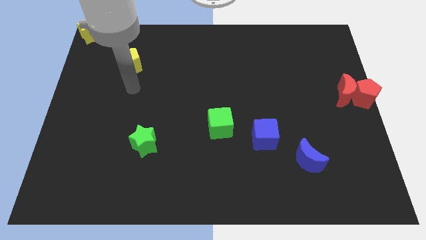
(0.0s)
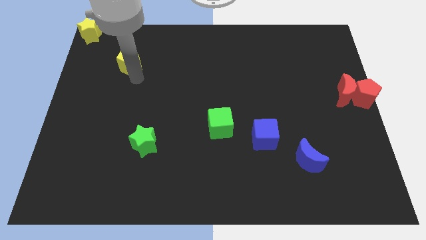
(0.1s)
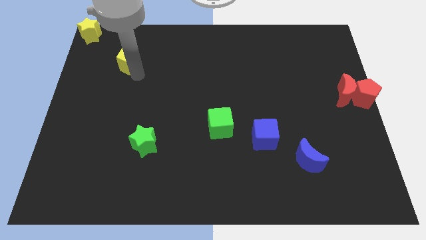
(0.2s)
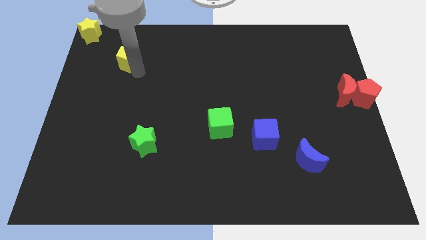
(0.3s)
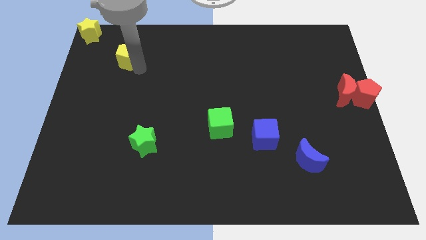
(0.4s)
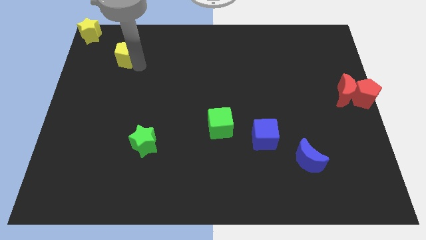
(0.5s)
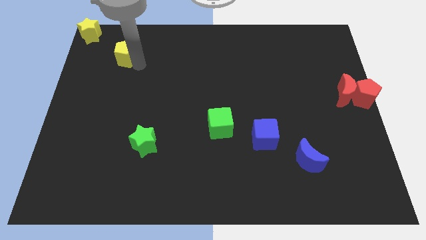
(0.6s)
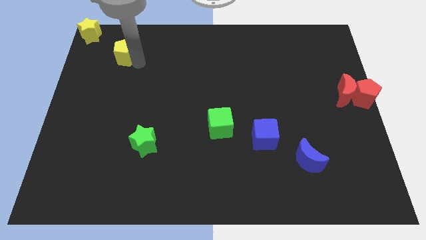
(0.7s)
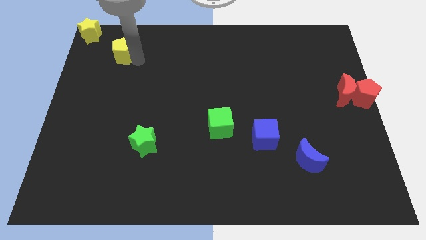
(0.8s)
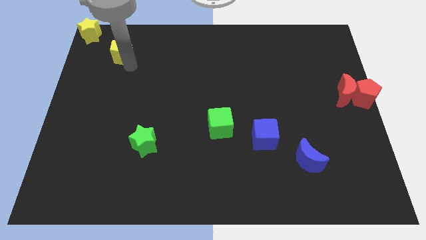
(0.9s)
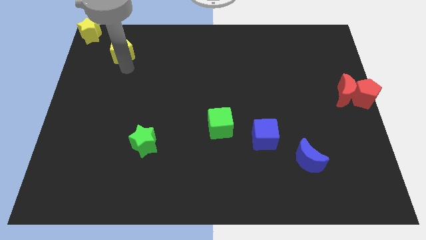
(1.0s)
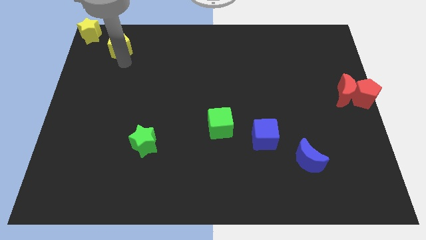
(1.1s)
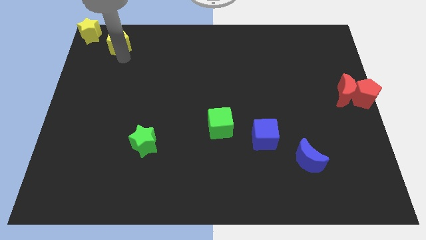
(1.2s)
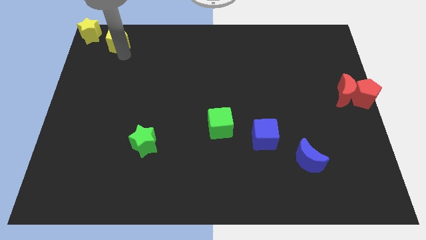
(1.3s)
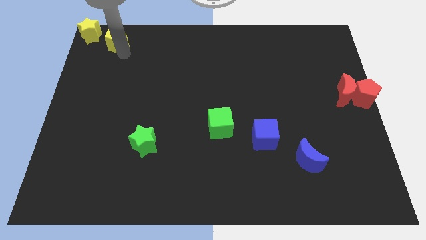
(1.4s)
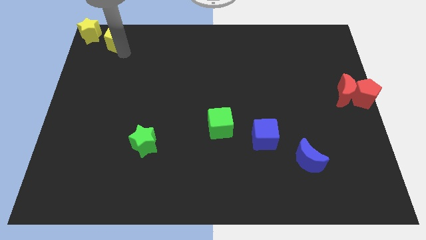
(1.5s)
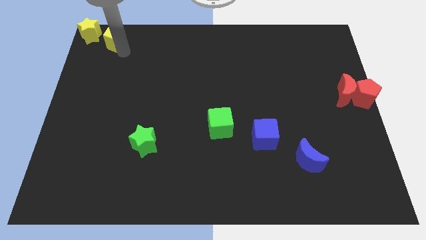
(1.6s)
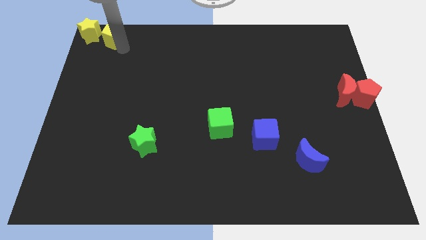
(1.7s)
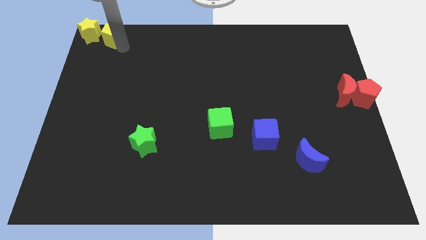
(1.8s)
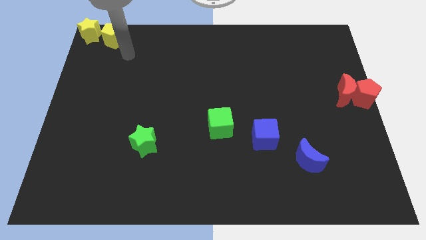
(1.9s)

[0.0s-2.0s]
move the yellow pentagon to the right of the yellow star

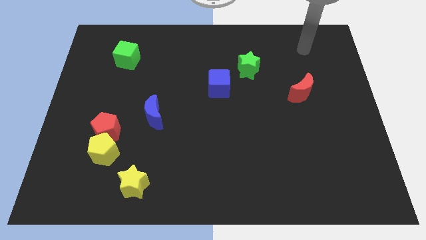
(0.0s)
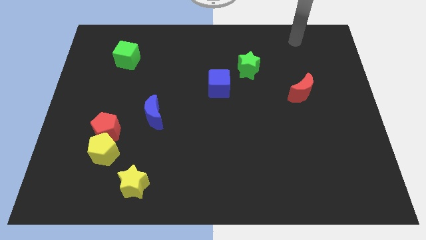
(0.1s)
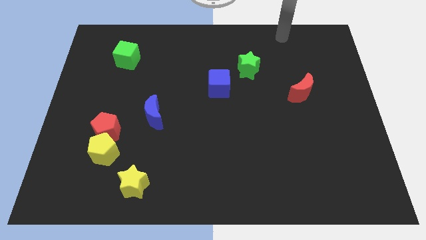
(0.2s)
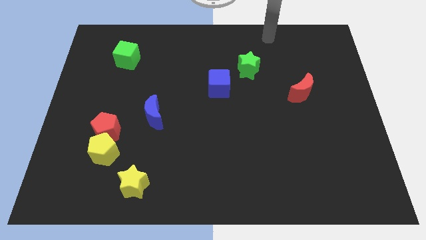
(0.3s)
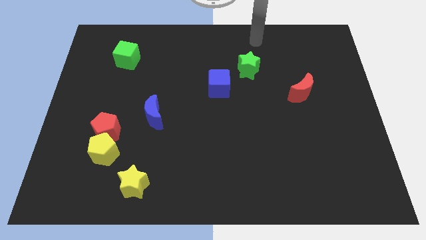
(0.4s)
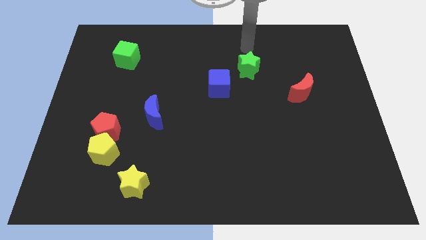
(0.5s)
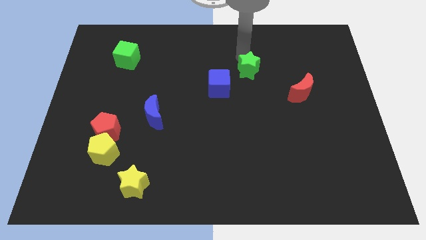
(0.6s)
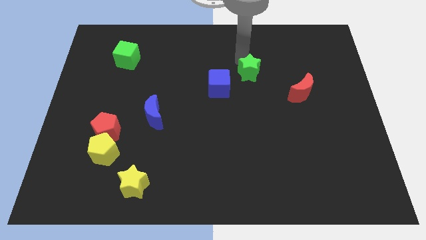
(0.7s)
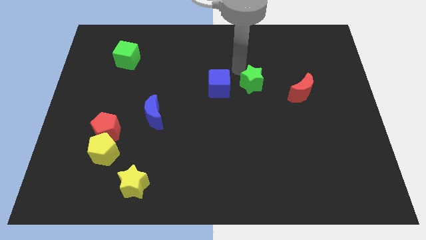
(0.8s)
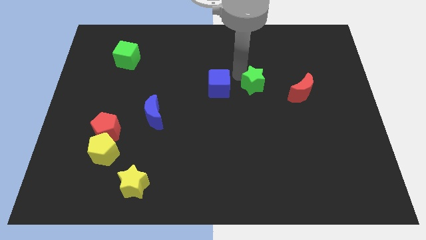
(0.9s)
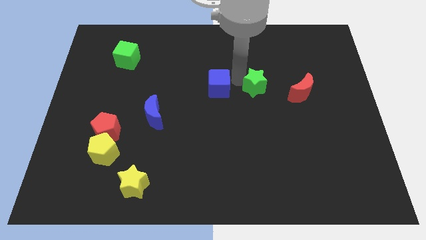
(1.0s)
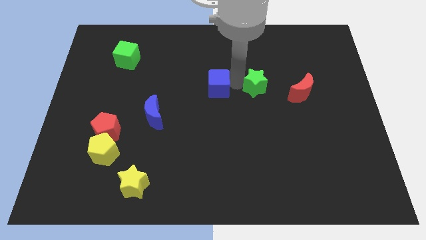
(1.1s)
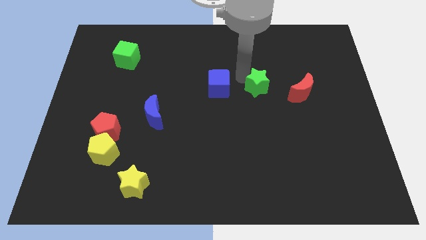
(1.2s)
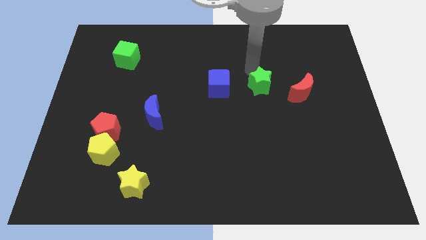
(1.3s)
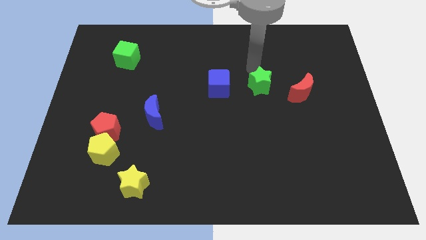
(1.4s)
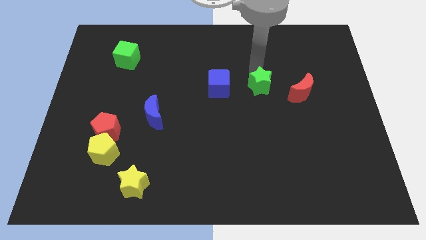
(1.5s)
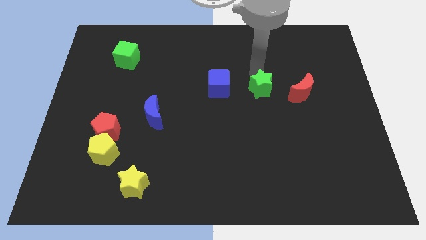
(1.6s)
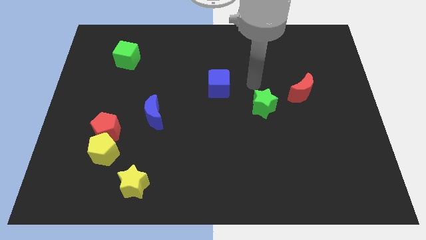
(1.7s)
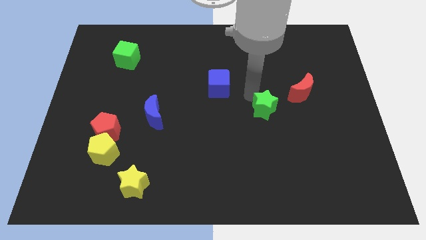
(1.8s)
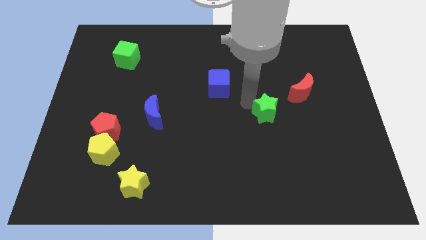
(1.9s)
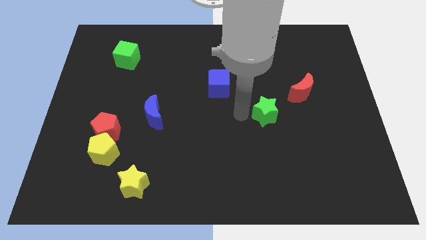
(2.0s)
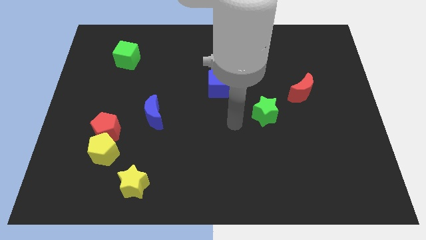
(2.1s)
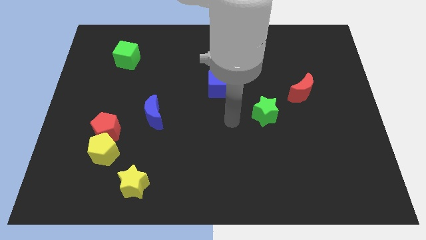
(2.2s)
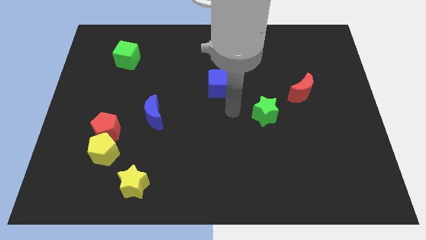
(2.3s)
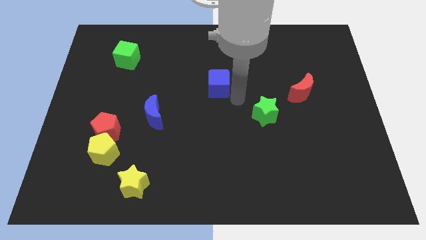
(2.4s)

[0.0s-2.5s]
move the green star towards the bottom side of the board

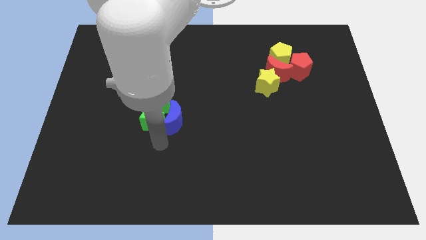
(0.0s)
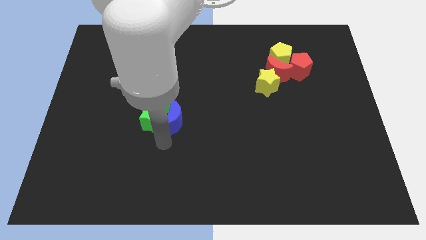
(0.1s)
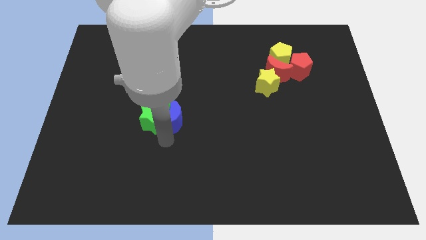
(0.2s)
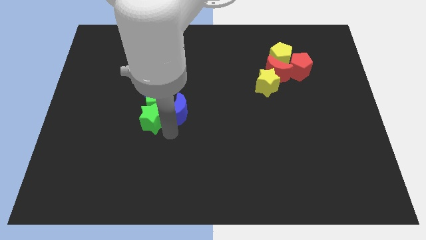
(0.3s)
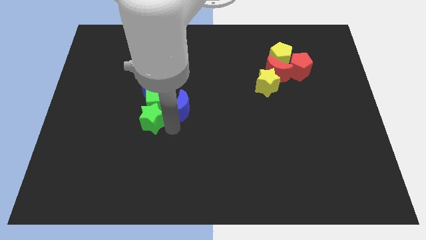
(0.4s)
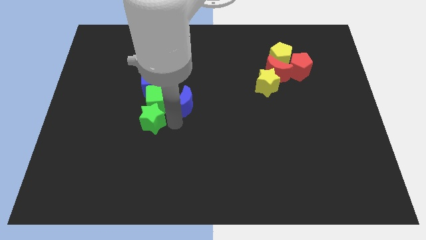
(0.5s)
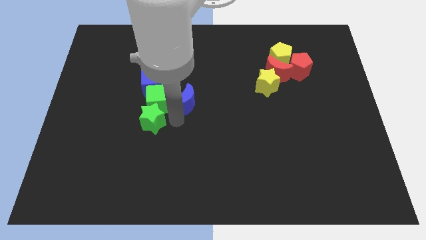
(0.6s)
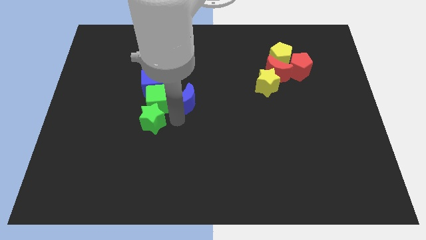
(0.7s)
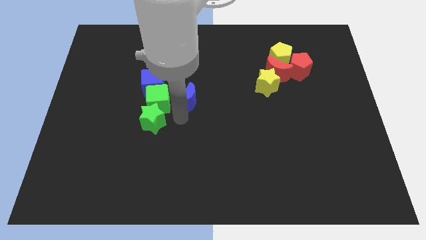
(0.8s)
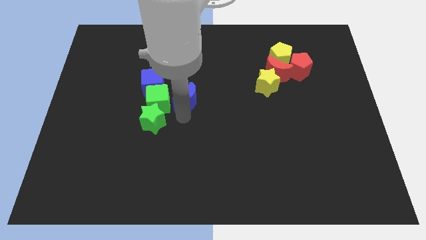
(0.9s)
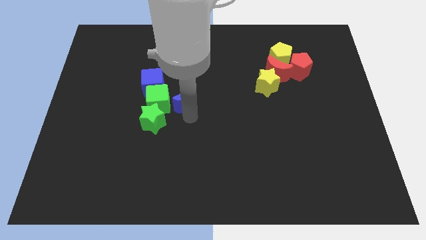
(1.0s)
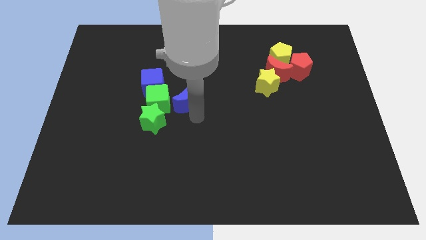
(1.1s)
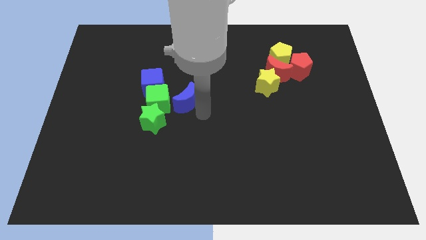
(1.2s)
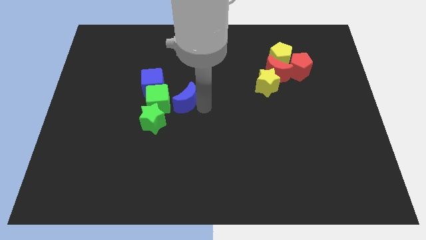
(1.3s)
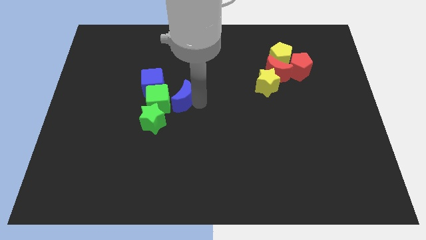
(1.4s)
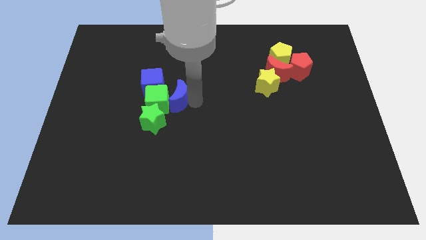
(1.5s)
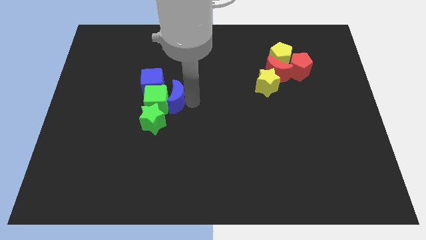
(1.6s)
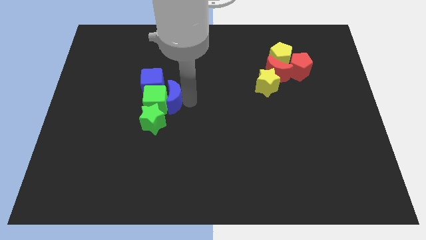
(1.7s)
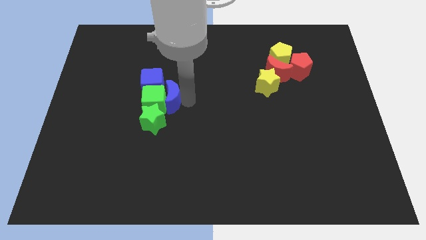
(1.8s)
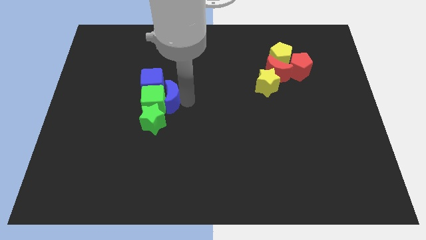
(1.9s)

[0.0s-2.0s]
push the blue crescent to the right of the green cube

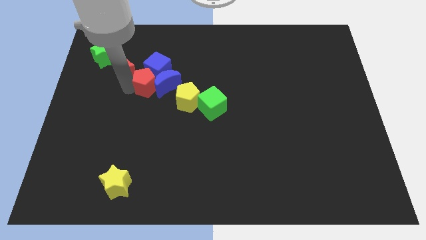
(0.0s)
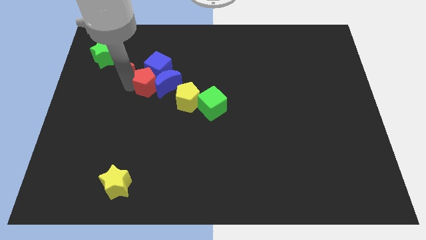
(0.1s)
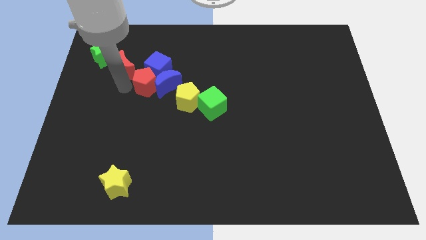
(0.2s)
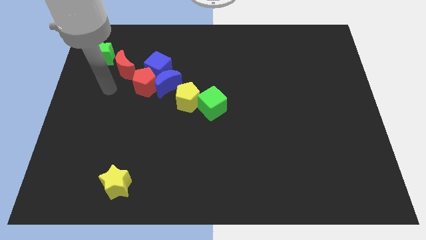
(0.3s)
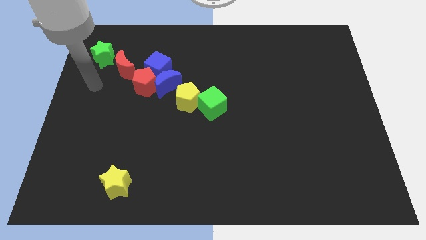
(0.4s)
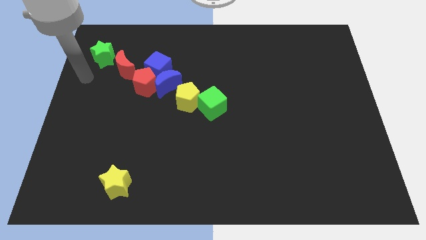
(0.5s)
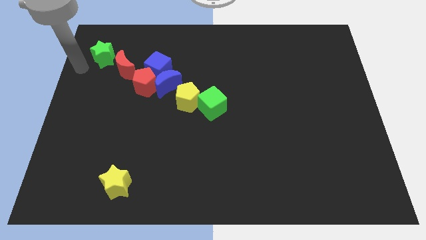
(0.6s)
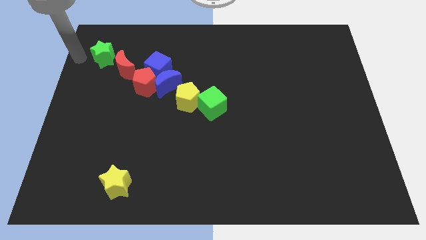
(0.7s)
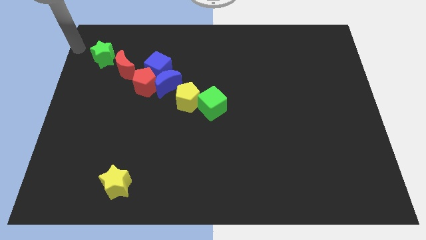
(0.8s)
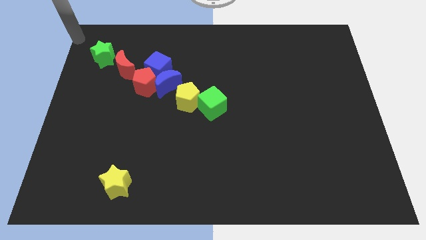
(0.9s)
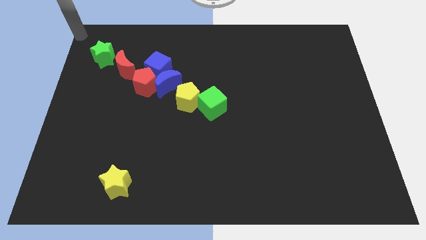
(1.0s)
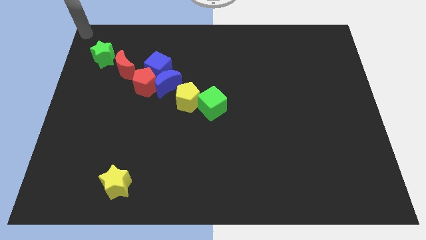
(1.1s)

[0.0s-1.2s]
slide the pointer towards the top left corner of the board

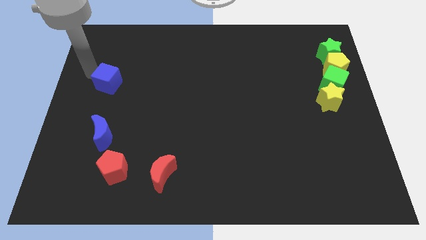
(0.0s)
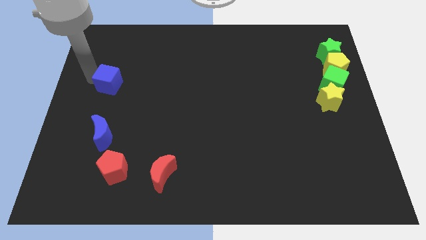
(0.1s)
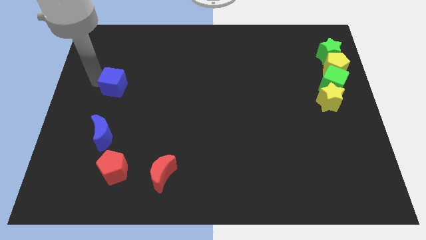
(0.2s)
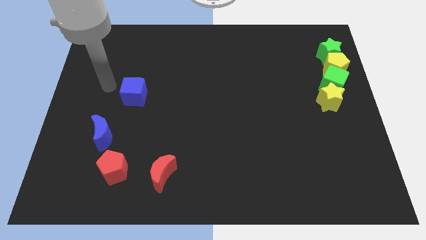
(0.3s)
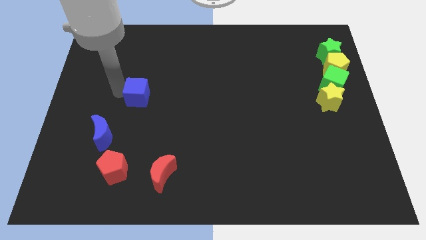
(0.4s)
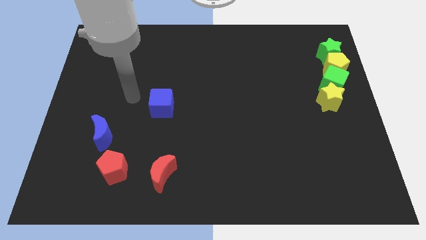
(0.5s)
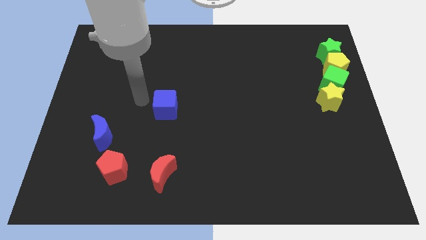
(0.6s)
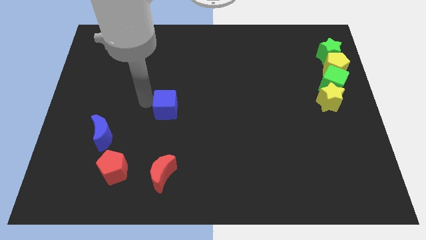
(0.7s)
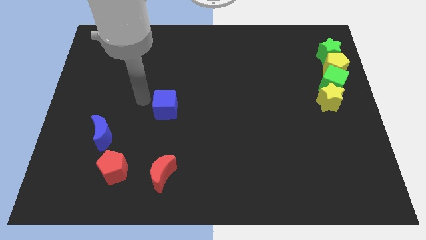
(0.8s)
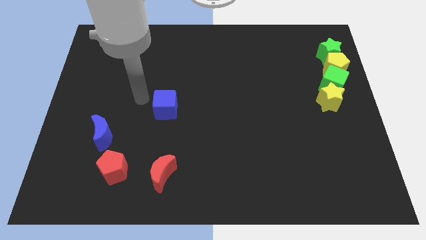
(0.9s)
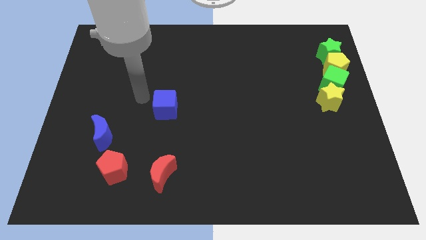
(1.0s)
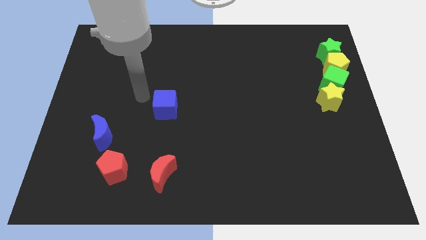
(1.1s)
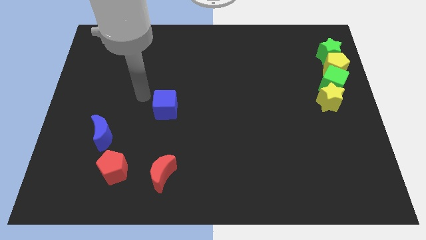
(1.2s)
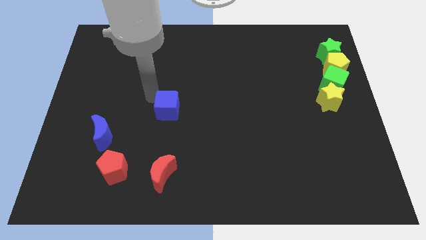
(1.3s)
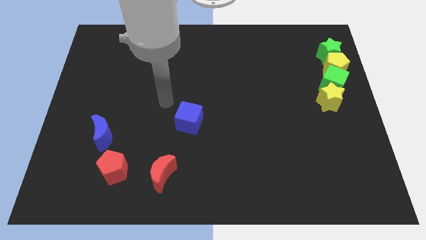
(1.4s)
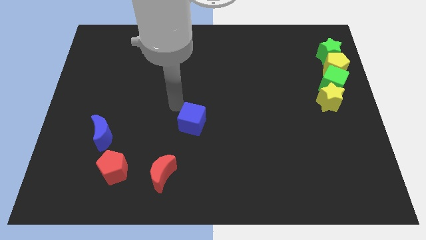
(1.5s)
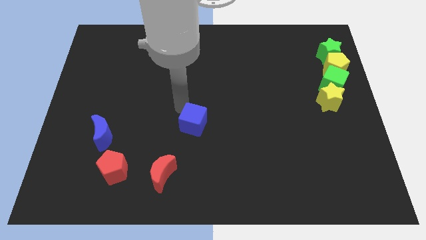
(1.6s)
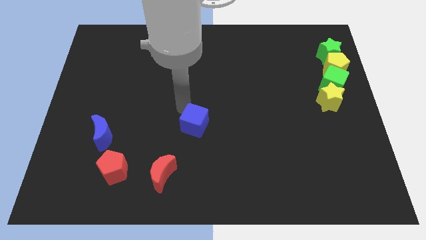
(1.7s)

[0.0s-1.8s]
push the blue cube towards bottom right of the board
